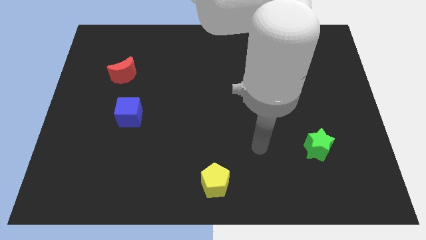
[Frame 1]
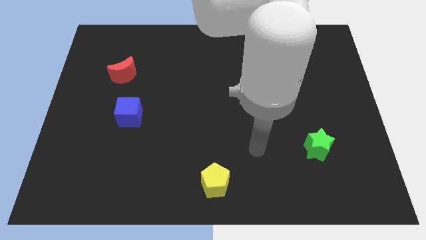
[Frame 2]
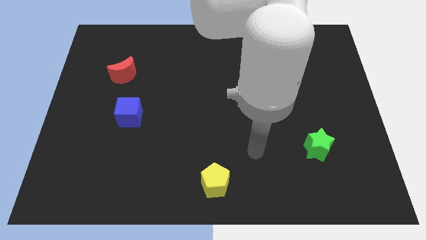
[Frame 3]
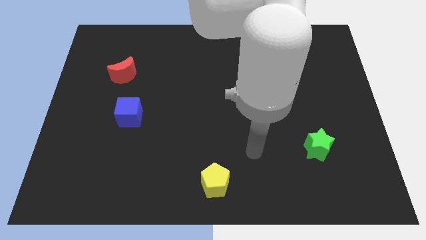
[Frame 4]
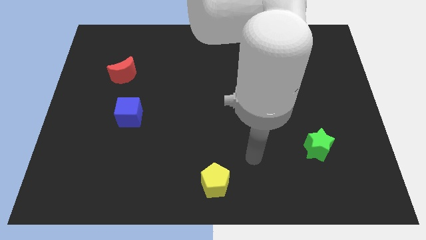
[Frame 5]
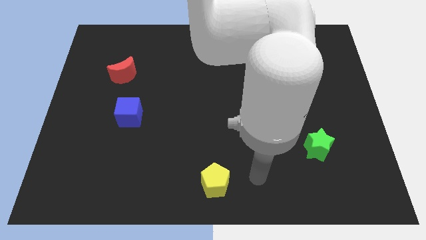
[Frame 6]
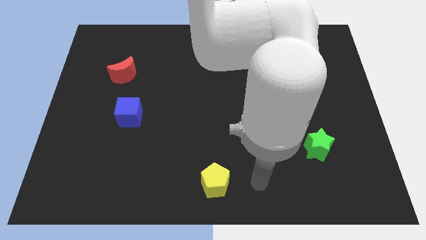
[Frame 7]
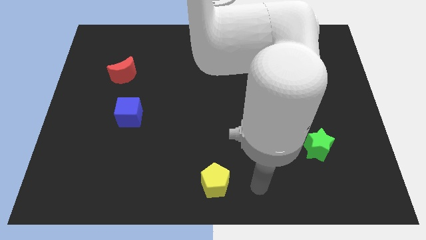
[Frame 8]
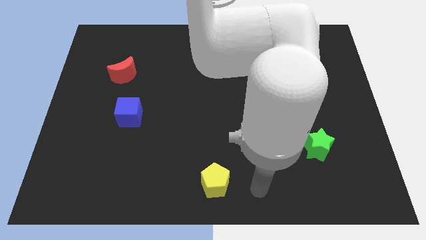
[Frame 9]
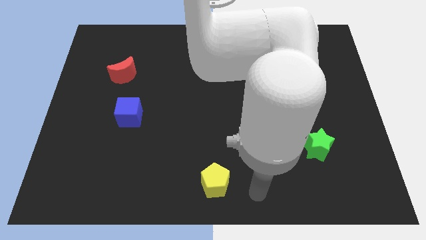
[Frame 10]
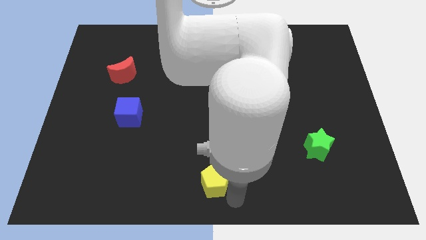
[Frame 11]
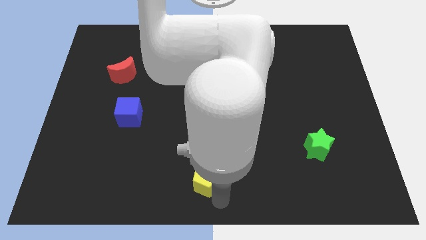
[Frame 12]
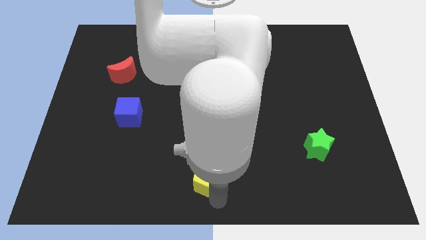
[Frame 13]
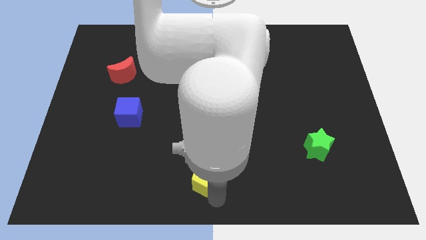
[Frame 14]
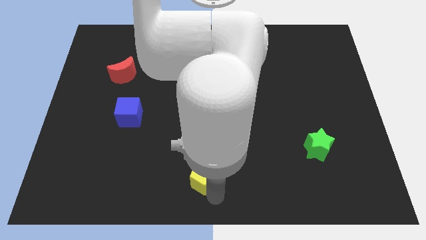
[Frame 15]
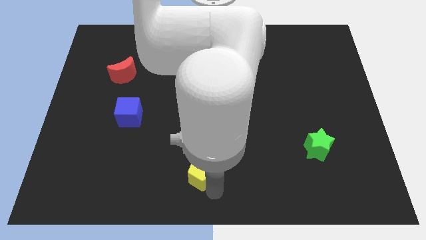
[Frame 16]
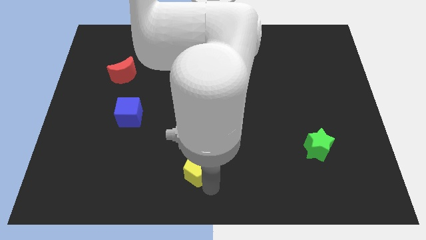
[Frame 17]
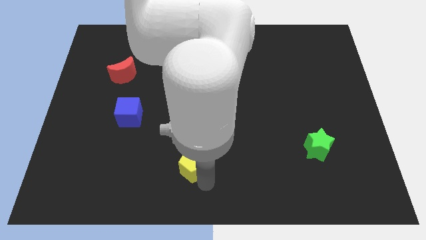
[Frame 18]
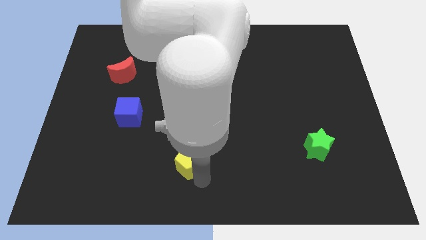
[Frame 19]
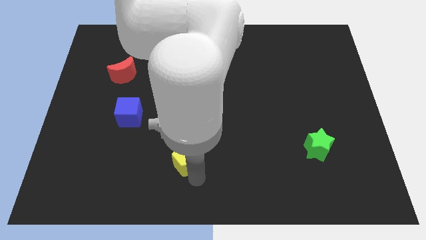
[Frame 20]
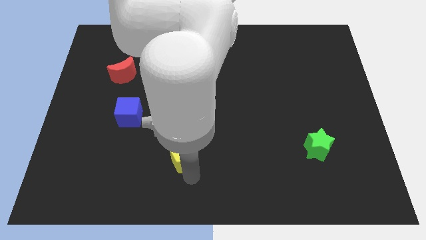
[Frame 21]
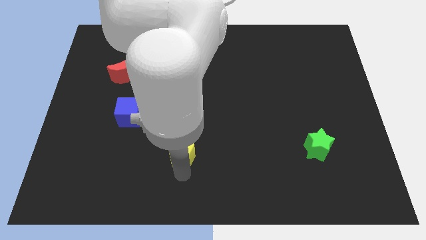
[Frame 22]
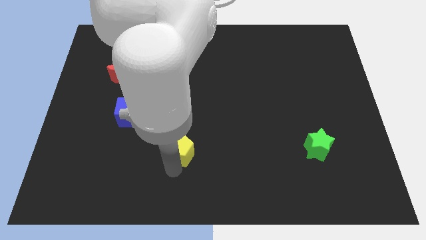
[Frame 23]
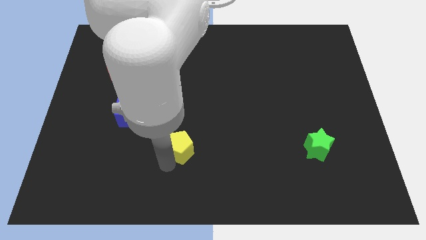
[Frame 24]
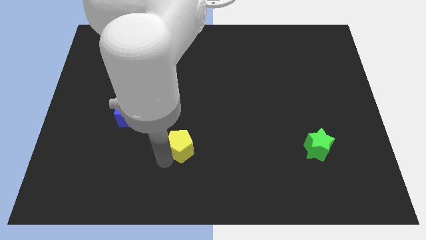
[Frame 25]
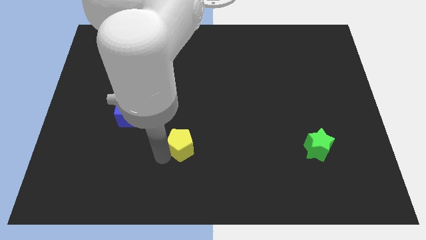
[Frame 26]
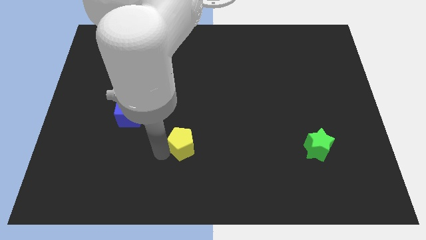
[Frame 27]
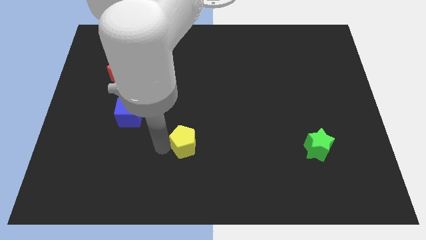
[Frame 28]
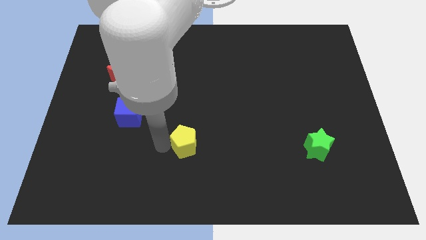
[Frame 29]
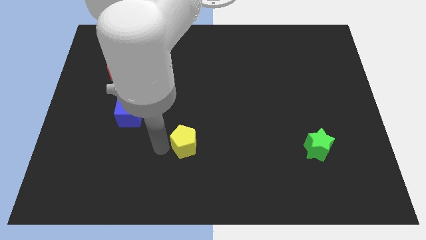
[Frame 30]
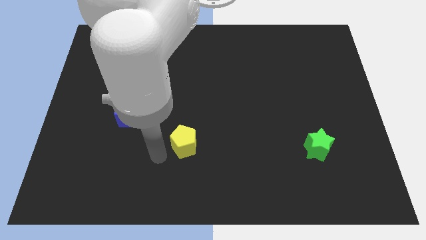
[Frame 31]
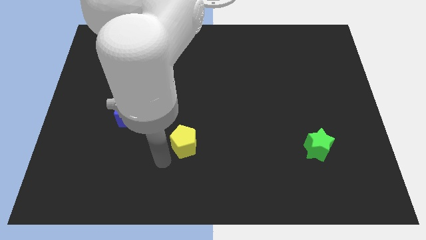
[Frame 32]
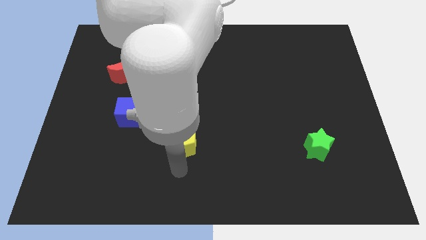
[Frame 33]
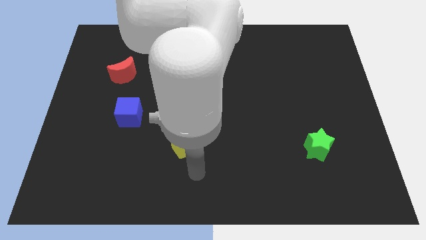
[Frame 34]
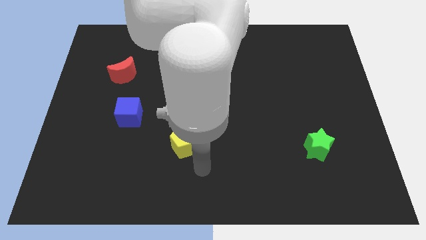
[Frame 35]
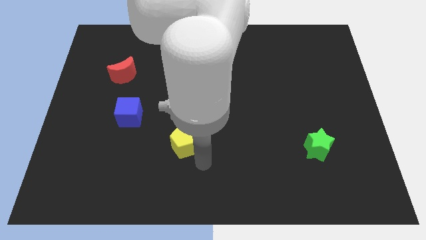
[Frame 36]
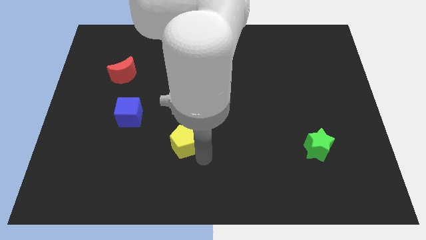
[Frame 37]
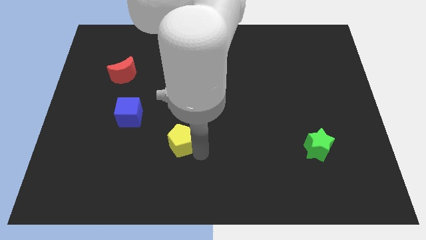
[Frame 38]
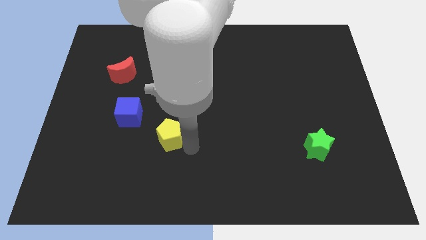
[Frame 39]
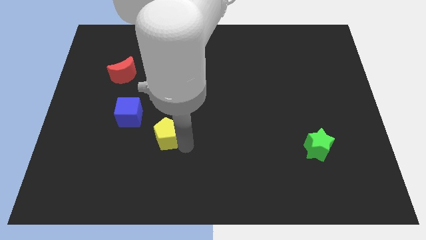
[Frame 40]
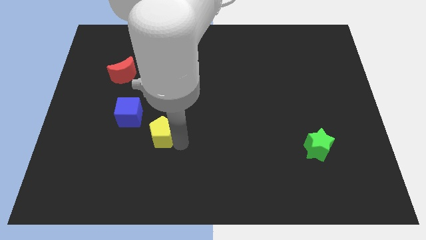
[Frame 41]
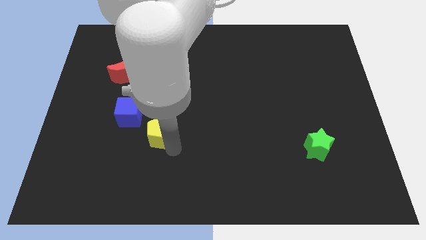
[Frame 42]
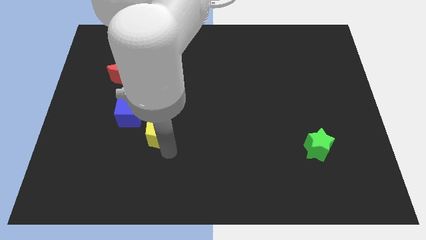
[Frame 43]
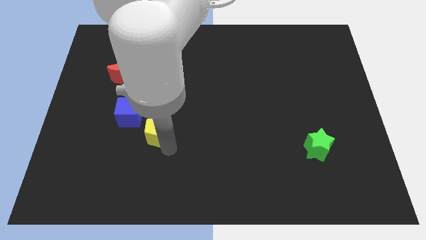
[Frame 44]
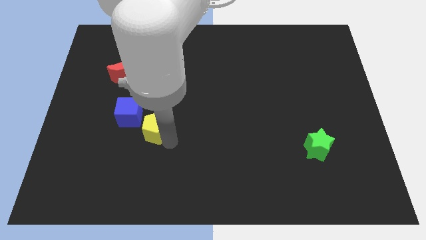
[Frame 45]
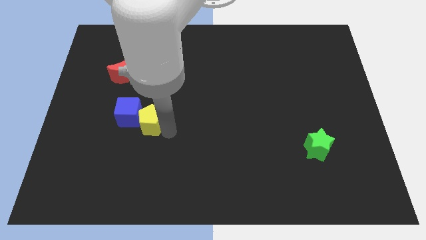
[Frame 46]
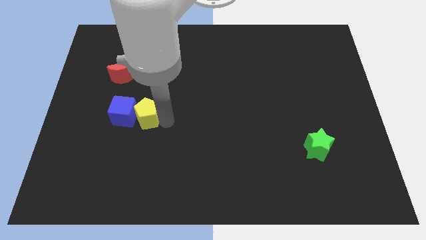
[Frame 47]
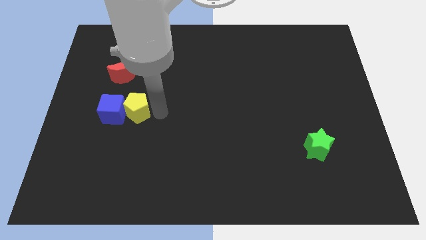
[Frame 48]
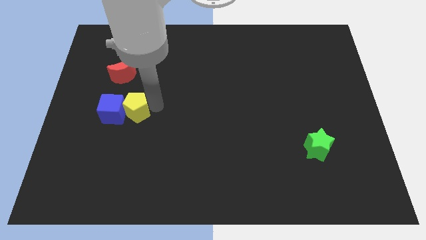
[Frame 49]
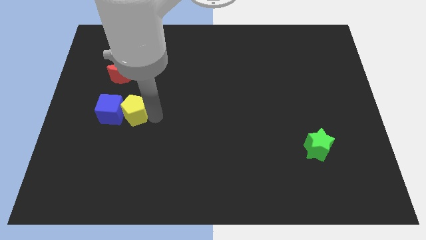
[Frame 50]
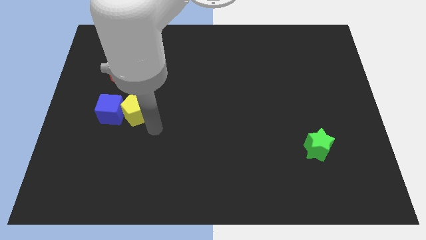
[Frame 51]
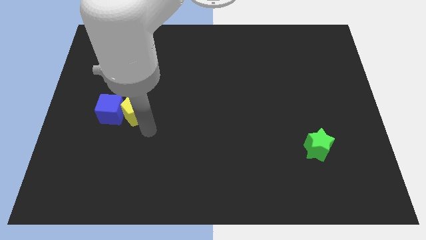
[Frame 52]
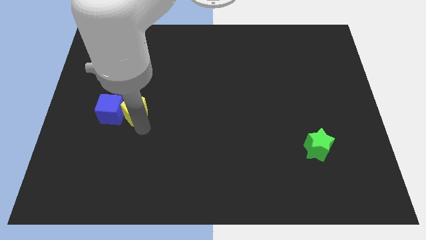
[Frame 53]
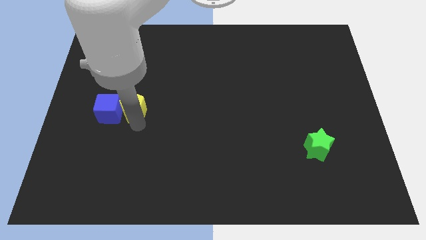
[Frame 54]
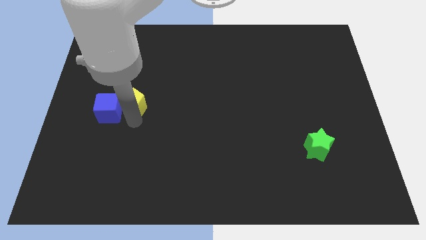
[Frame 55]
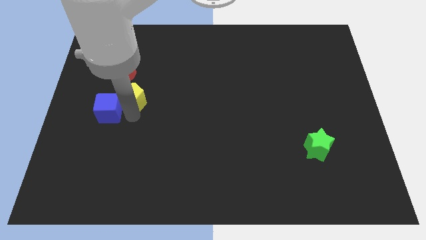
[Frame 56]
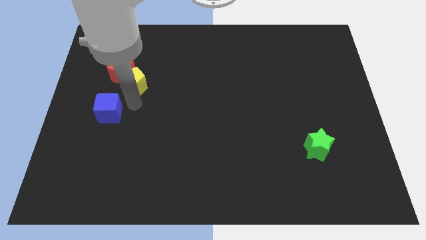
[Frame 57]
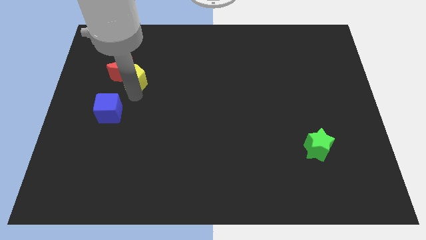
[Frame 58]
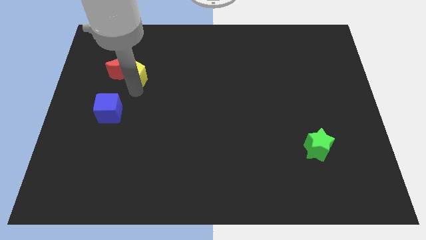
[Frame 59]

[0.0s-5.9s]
push the yellow pentagon next to the red moon

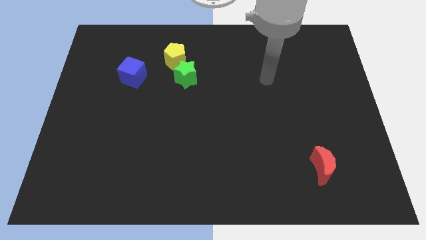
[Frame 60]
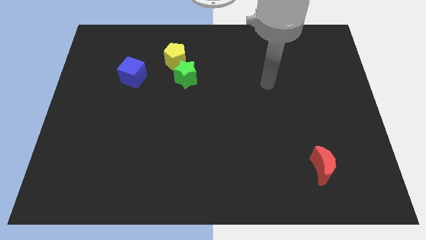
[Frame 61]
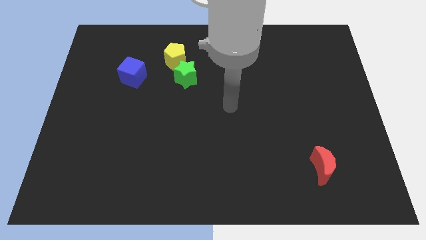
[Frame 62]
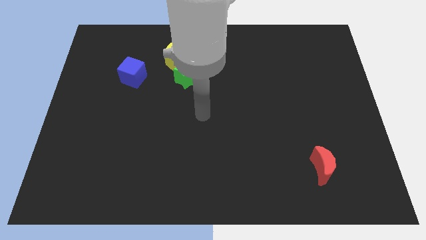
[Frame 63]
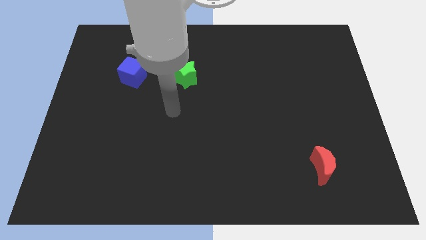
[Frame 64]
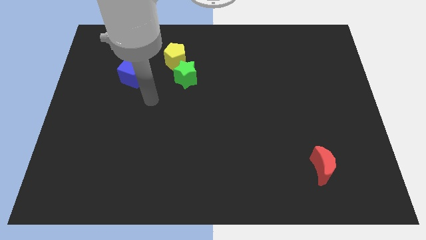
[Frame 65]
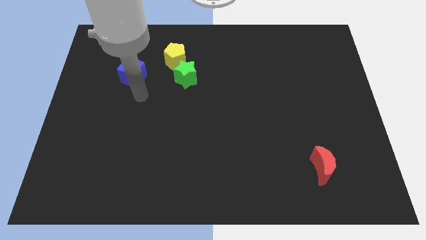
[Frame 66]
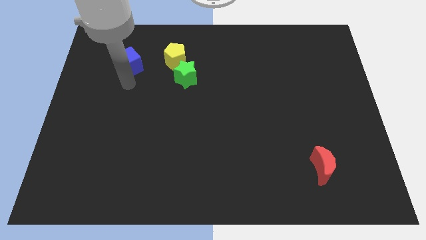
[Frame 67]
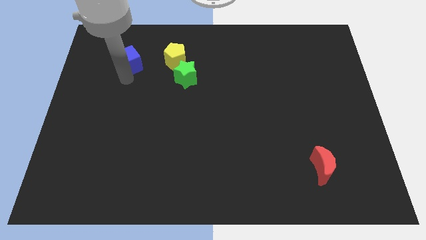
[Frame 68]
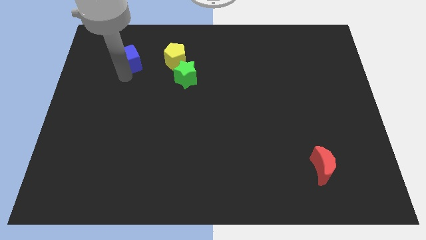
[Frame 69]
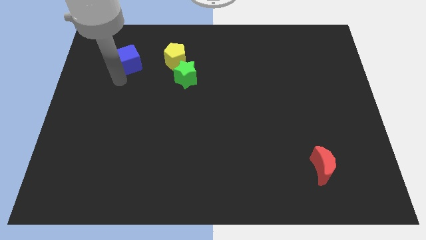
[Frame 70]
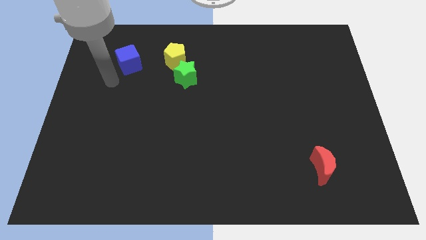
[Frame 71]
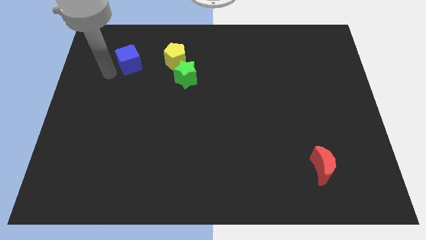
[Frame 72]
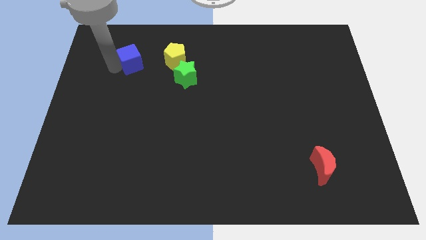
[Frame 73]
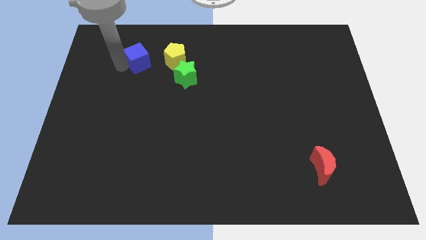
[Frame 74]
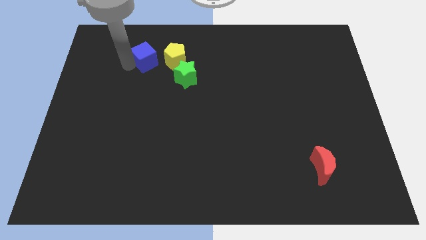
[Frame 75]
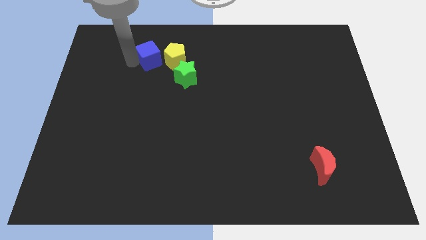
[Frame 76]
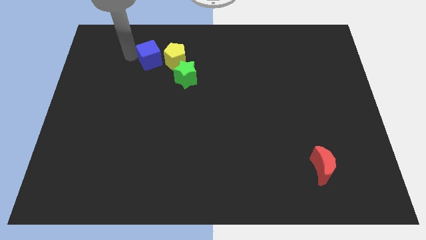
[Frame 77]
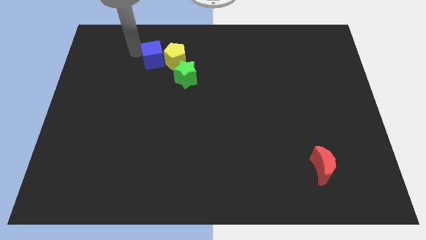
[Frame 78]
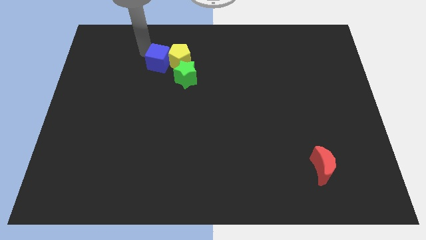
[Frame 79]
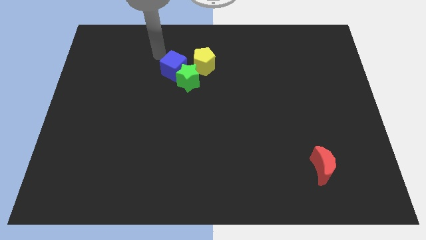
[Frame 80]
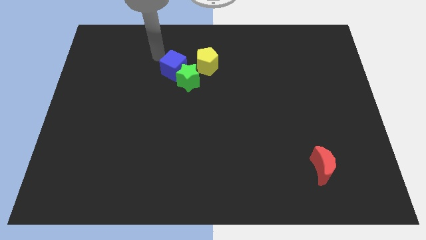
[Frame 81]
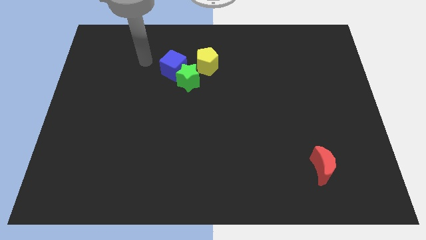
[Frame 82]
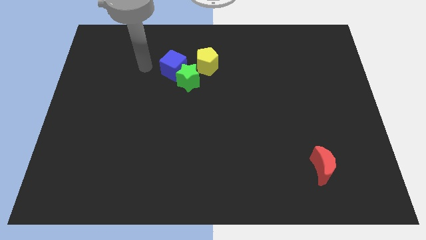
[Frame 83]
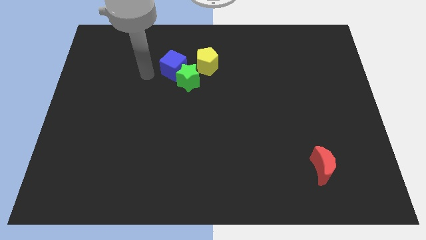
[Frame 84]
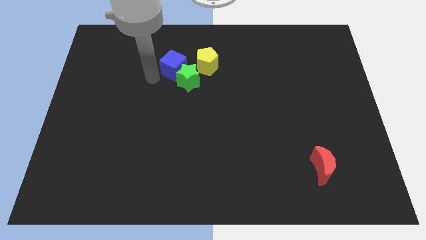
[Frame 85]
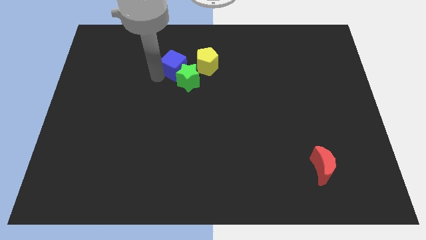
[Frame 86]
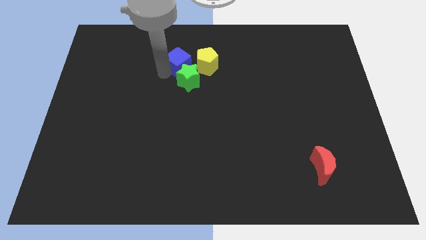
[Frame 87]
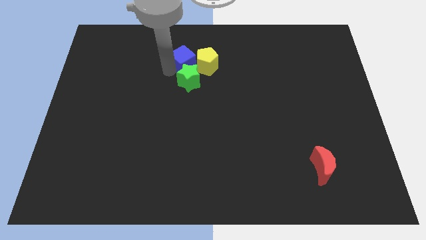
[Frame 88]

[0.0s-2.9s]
put the cube towards the pentagon
